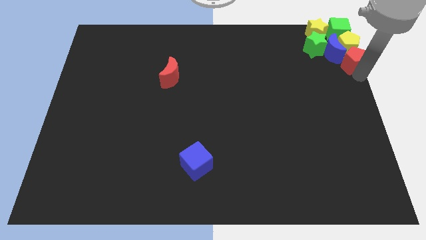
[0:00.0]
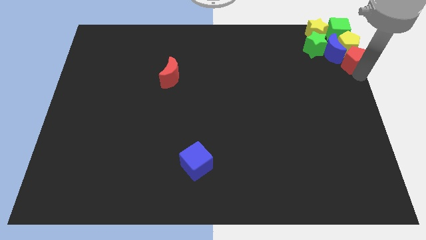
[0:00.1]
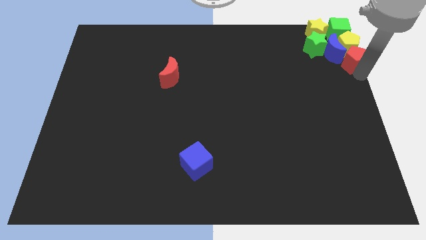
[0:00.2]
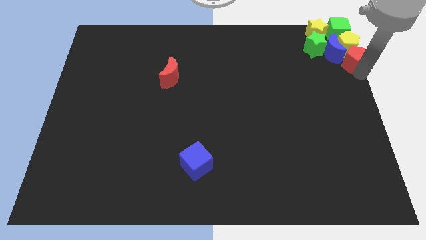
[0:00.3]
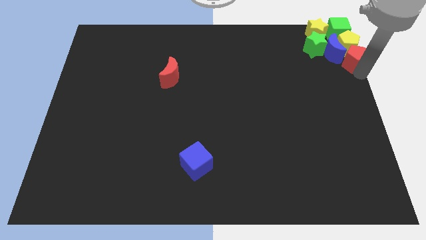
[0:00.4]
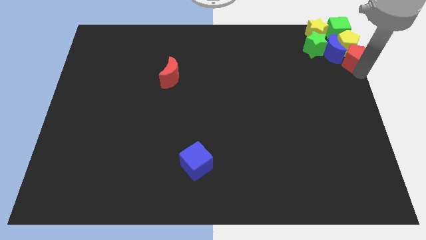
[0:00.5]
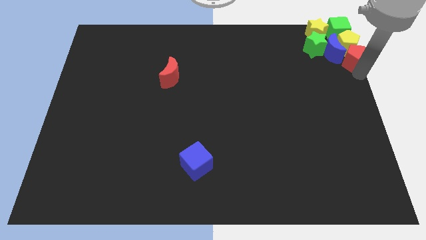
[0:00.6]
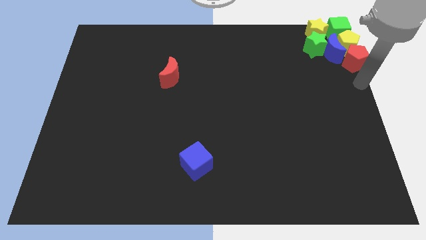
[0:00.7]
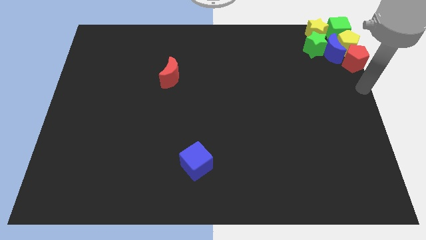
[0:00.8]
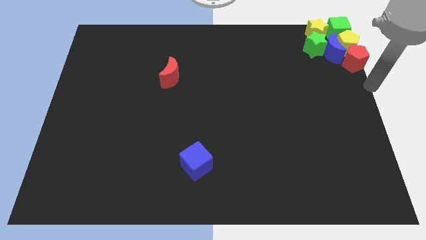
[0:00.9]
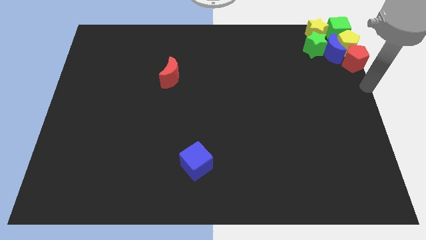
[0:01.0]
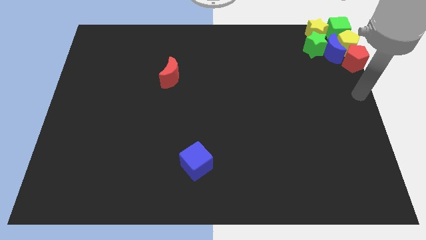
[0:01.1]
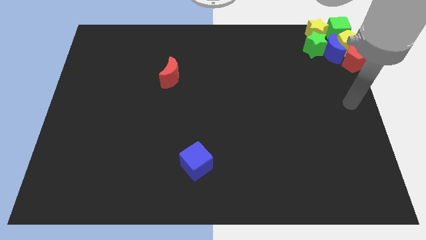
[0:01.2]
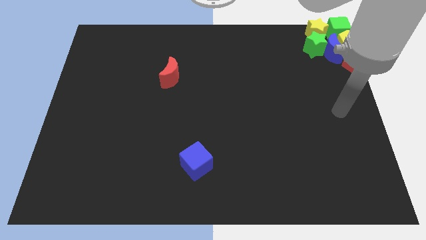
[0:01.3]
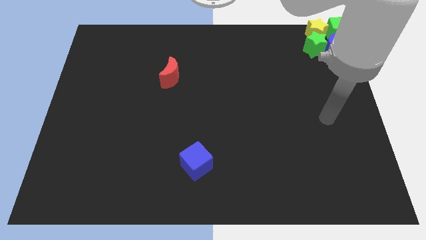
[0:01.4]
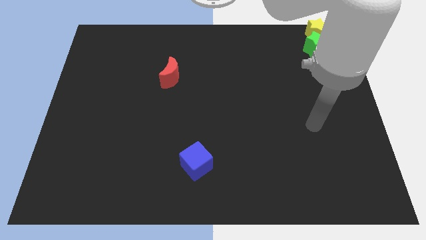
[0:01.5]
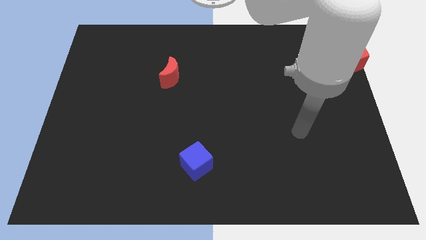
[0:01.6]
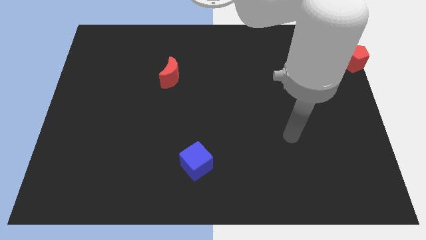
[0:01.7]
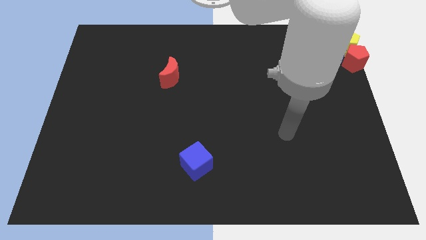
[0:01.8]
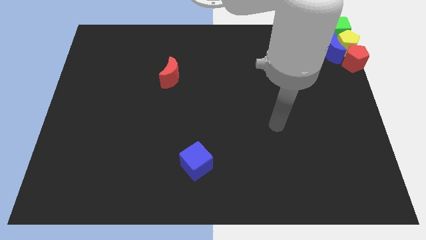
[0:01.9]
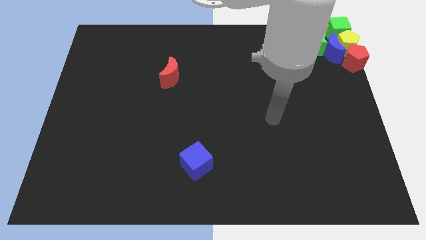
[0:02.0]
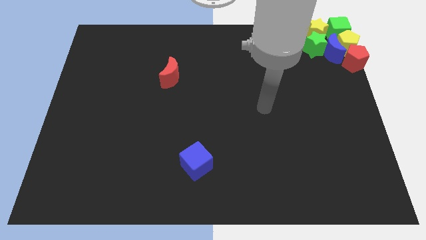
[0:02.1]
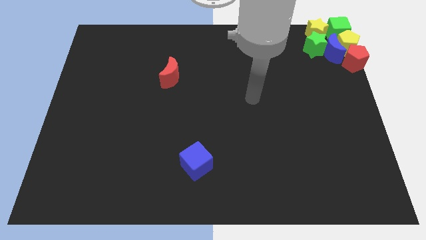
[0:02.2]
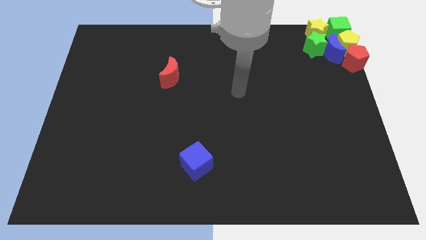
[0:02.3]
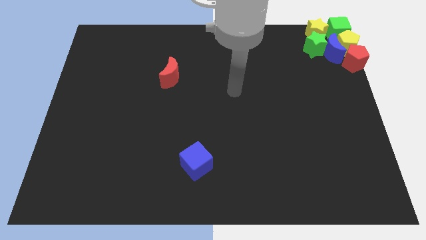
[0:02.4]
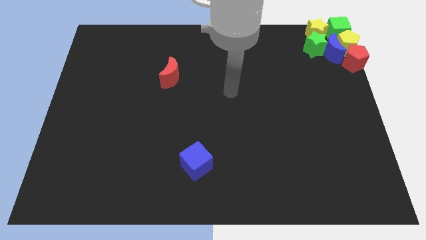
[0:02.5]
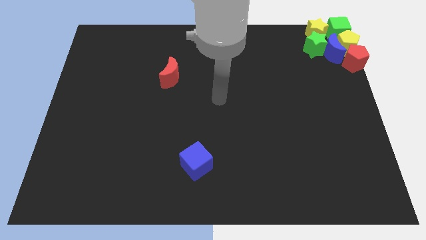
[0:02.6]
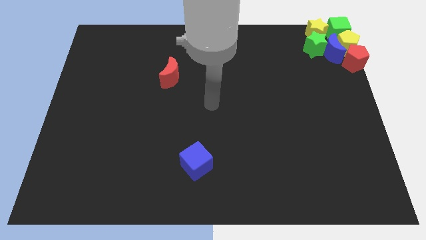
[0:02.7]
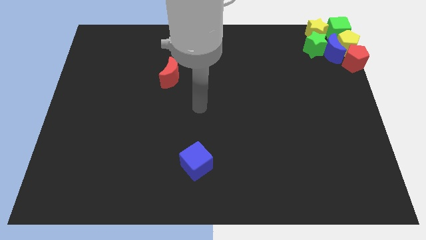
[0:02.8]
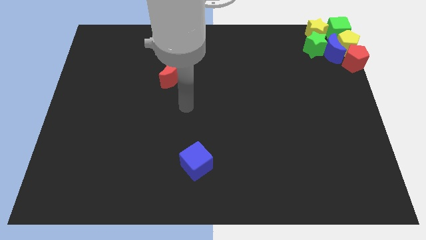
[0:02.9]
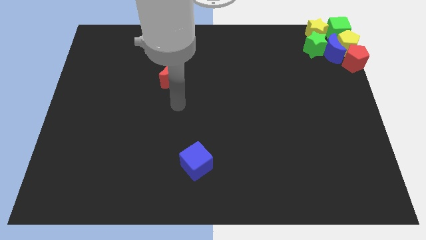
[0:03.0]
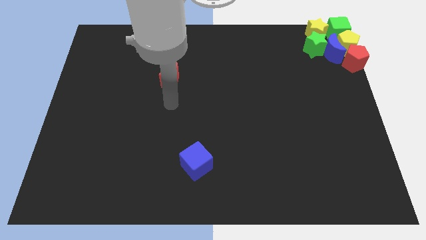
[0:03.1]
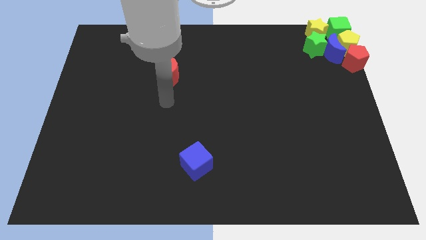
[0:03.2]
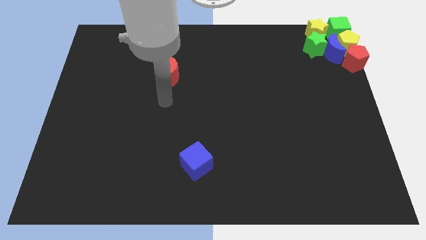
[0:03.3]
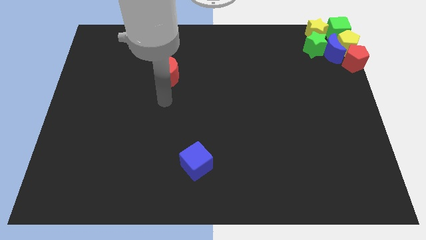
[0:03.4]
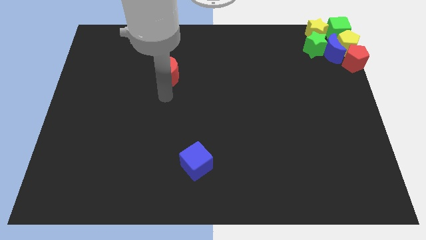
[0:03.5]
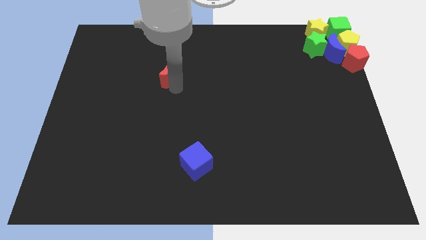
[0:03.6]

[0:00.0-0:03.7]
place your arm below the red crescent

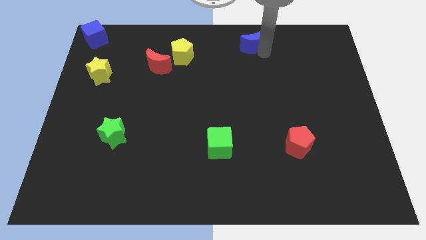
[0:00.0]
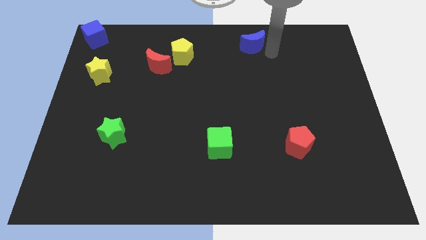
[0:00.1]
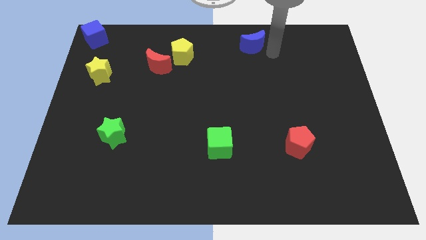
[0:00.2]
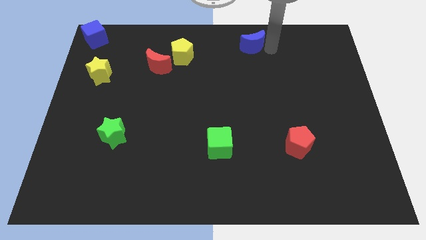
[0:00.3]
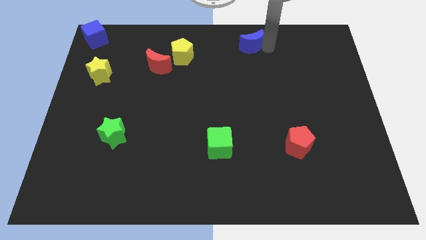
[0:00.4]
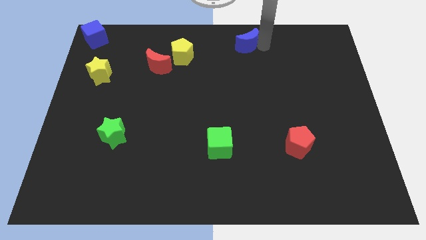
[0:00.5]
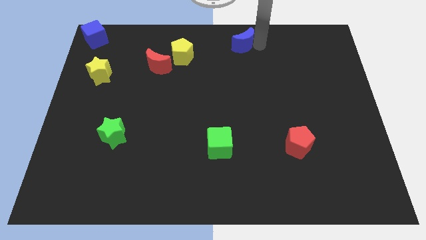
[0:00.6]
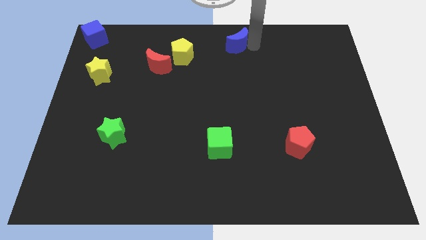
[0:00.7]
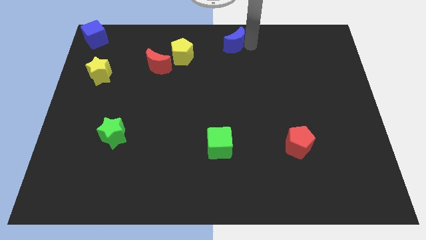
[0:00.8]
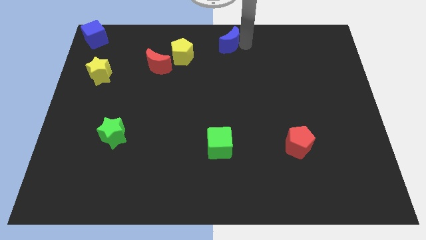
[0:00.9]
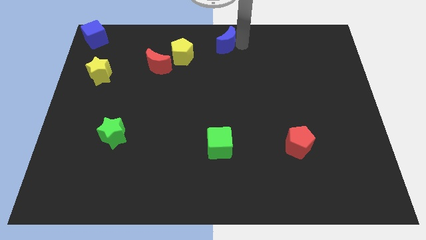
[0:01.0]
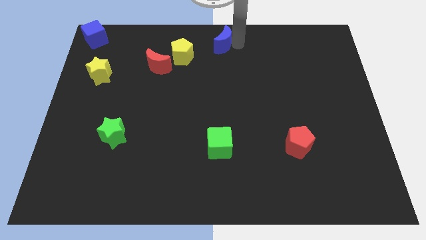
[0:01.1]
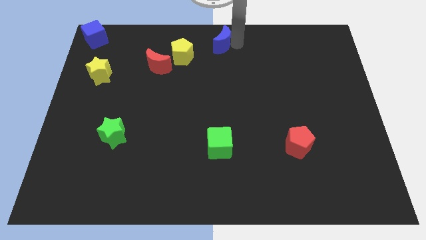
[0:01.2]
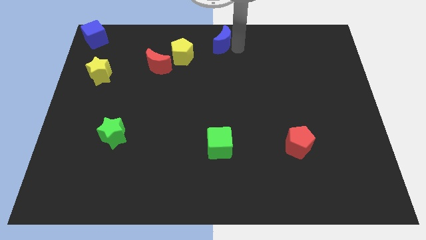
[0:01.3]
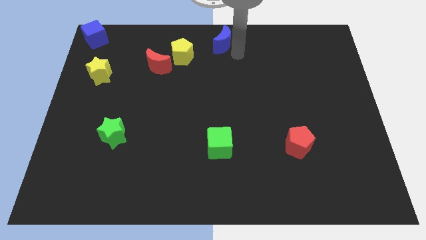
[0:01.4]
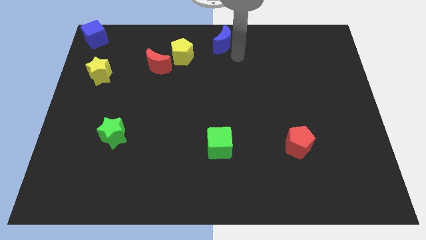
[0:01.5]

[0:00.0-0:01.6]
push the blue moon to the top center of the board

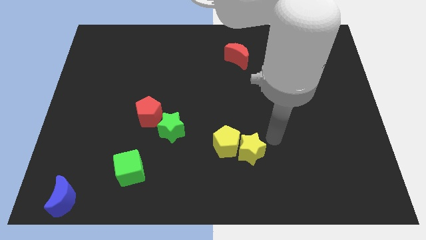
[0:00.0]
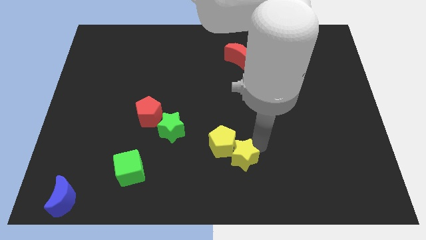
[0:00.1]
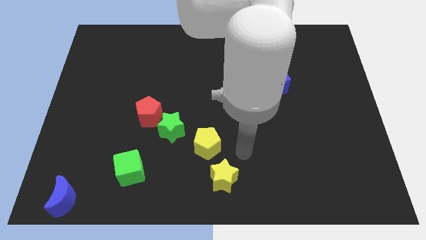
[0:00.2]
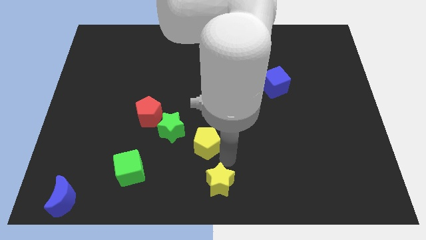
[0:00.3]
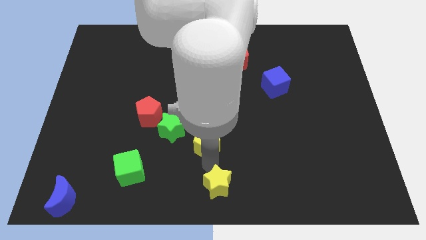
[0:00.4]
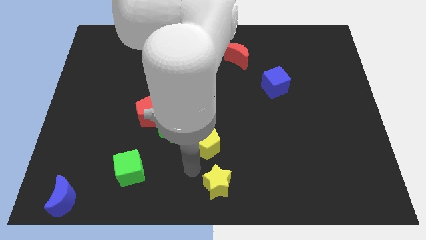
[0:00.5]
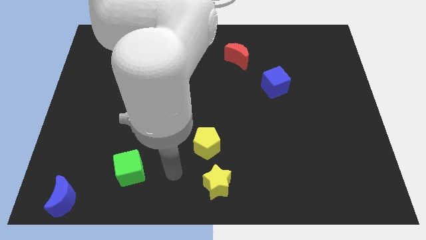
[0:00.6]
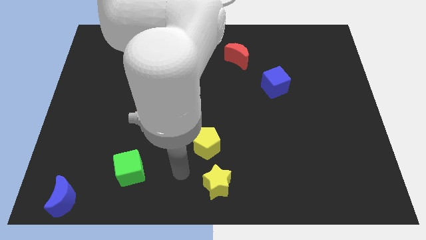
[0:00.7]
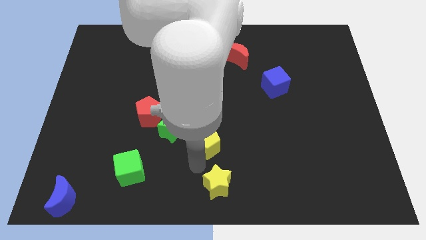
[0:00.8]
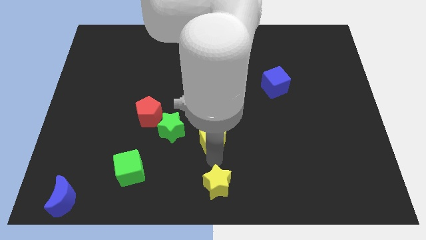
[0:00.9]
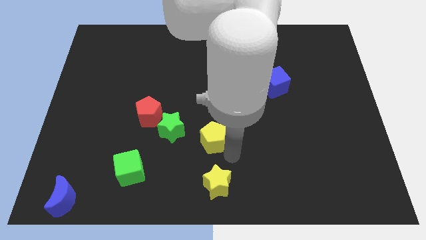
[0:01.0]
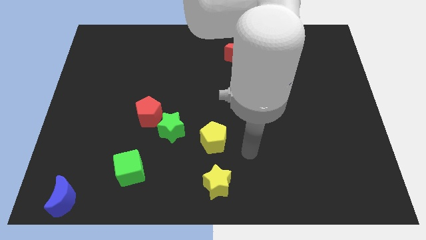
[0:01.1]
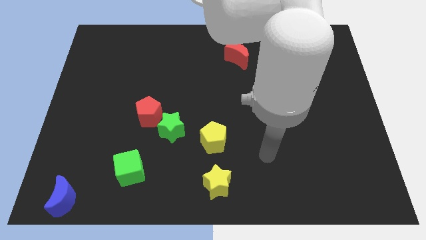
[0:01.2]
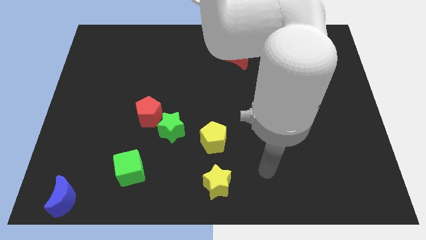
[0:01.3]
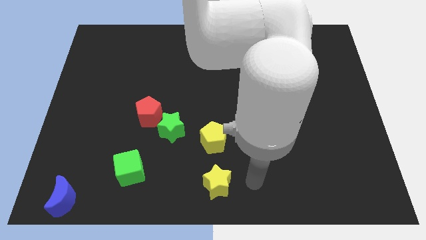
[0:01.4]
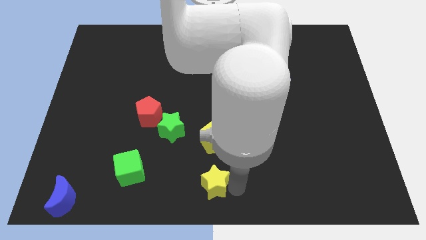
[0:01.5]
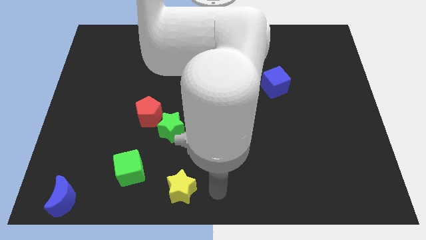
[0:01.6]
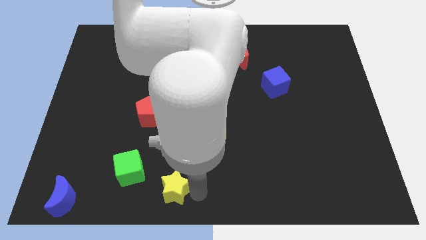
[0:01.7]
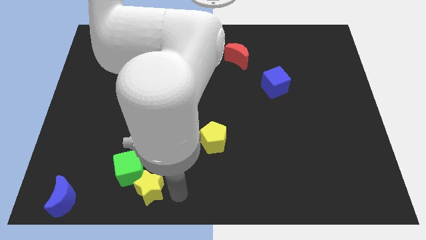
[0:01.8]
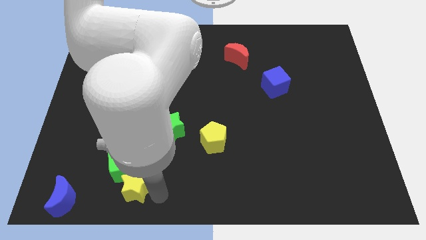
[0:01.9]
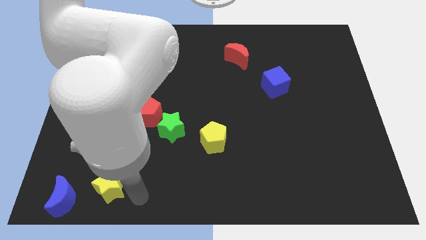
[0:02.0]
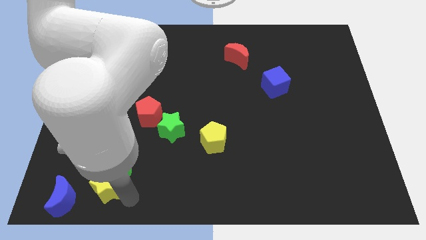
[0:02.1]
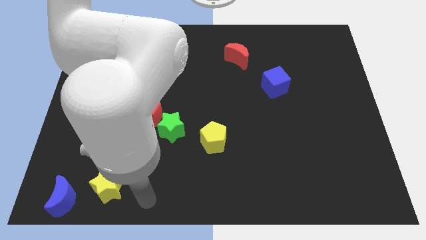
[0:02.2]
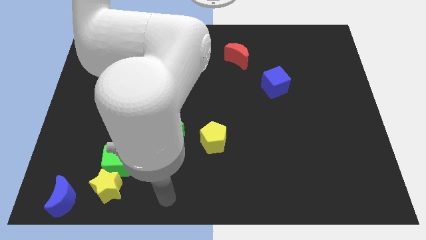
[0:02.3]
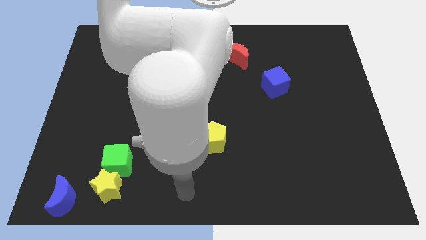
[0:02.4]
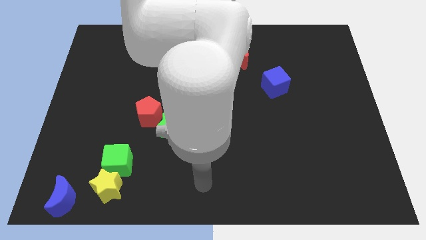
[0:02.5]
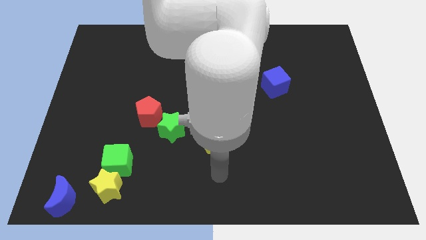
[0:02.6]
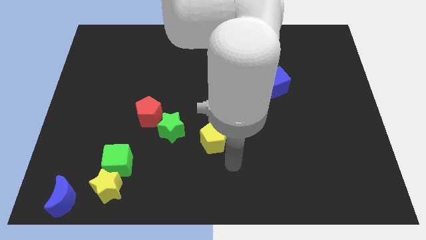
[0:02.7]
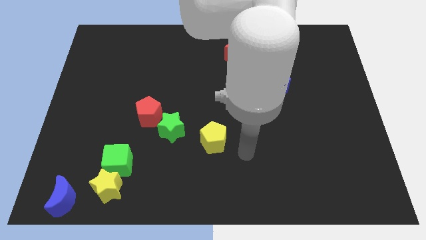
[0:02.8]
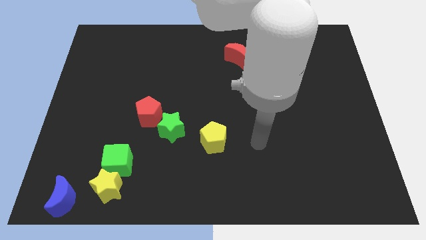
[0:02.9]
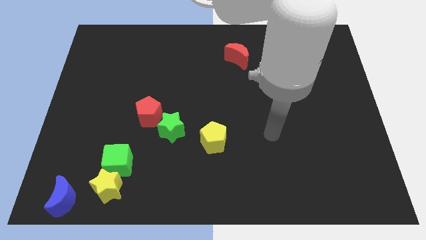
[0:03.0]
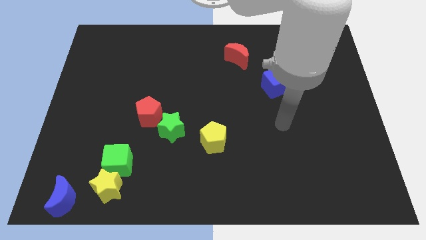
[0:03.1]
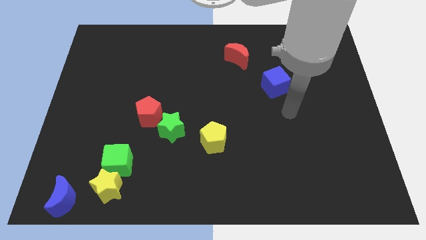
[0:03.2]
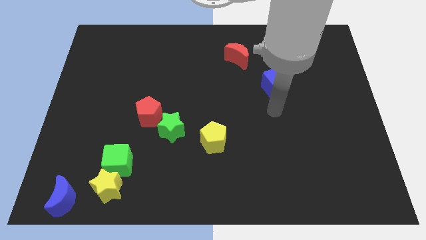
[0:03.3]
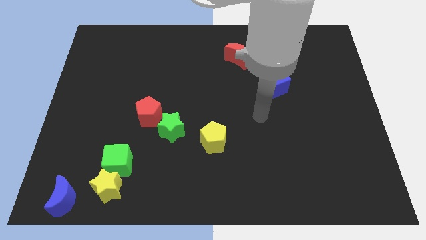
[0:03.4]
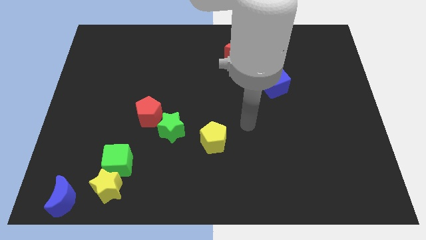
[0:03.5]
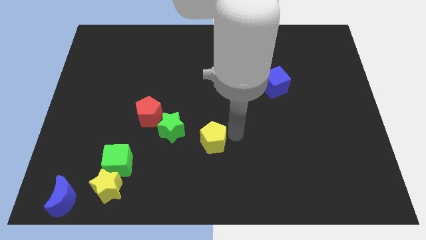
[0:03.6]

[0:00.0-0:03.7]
move yellow star towards the bottom left of the board
